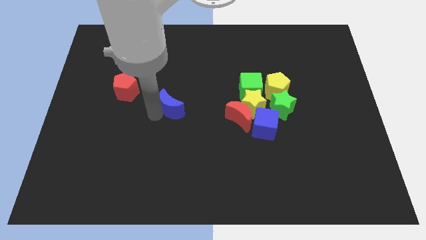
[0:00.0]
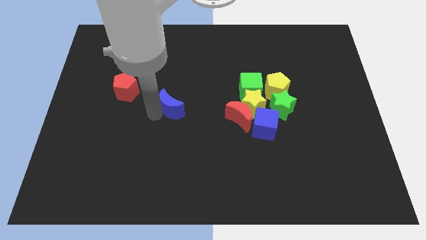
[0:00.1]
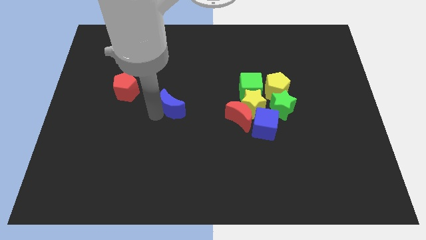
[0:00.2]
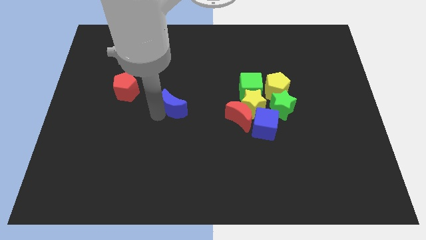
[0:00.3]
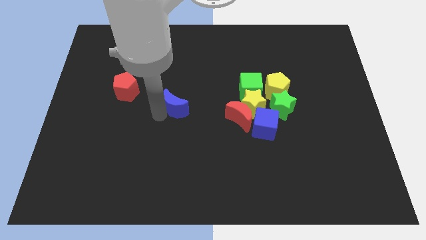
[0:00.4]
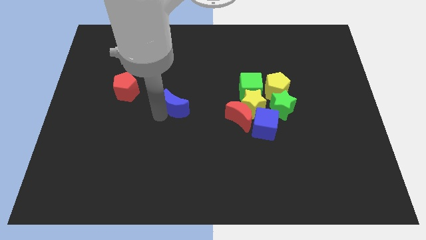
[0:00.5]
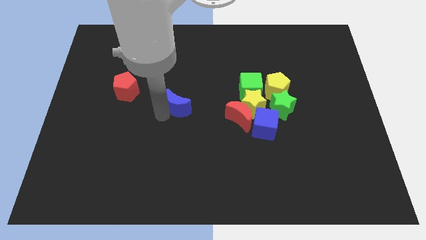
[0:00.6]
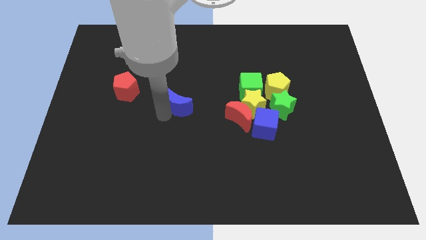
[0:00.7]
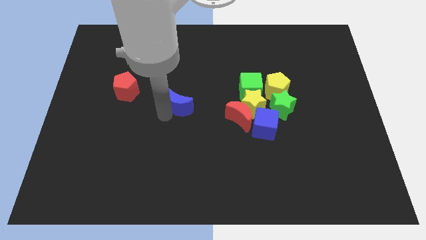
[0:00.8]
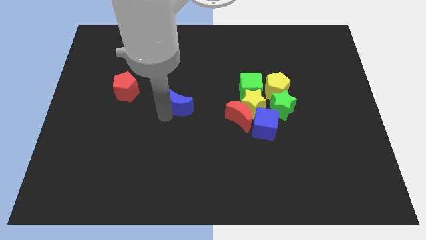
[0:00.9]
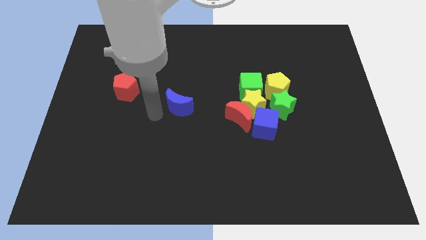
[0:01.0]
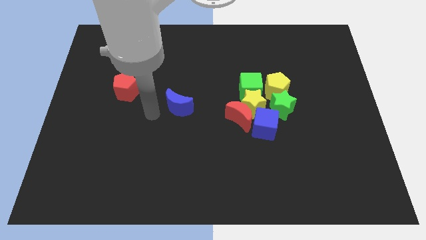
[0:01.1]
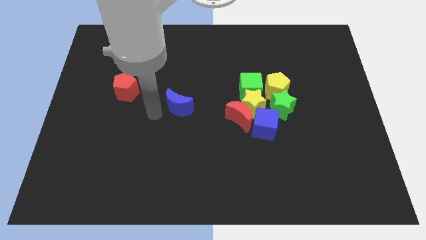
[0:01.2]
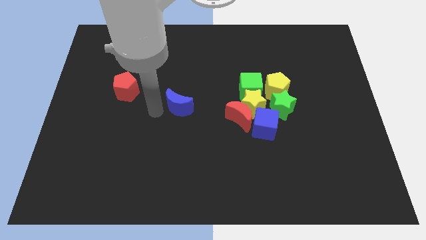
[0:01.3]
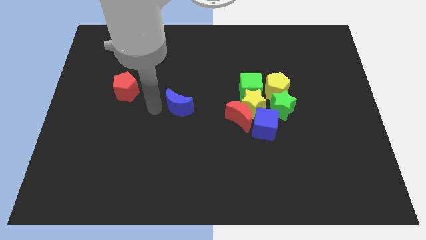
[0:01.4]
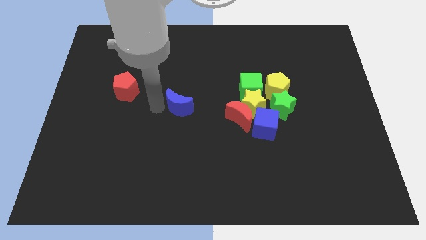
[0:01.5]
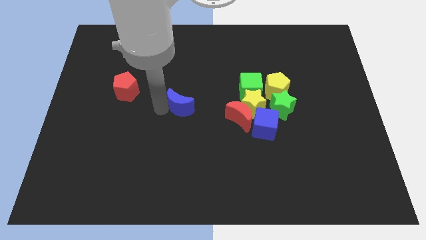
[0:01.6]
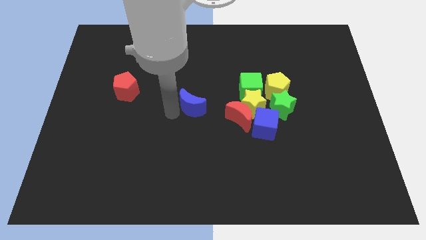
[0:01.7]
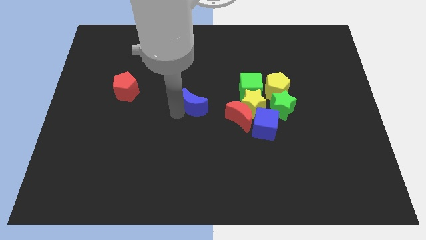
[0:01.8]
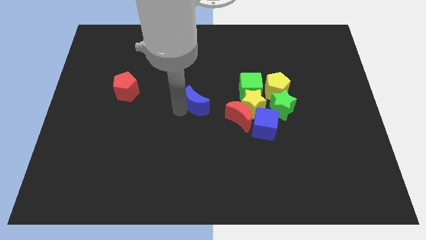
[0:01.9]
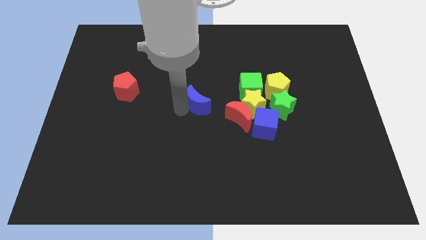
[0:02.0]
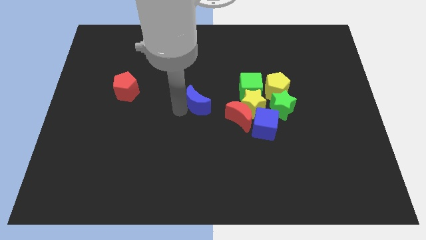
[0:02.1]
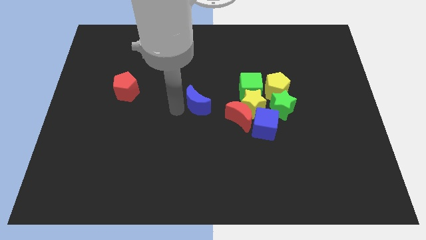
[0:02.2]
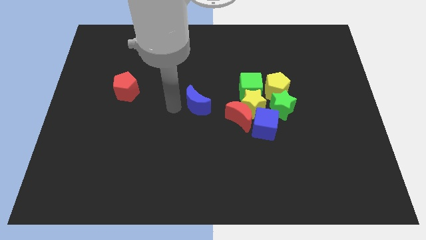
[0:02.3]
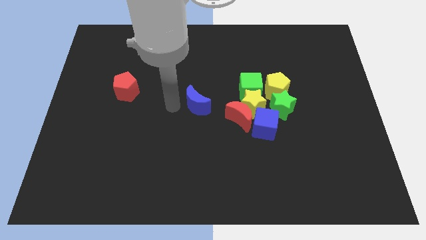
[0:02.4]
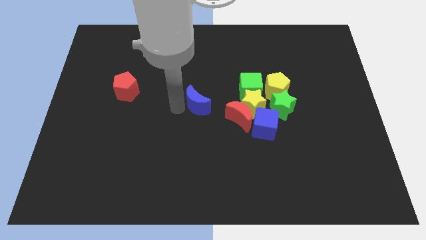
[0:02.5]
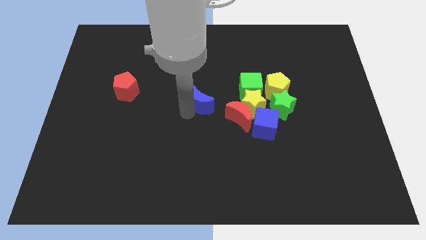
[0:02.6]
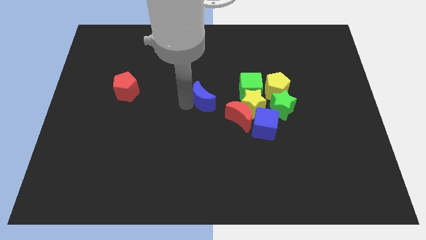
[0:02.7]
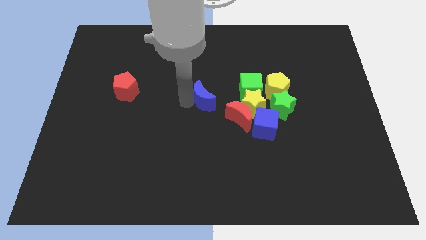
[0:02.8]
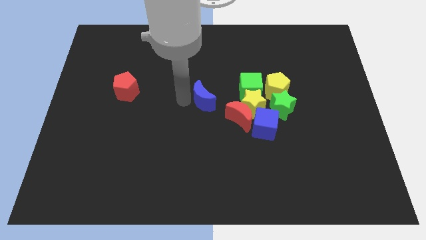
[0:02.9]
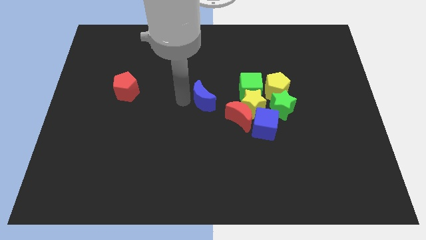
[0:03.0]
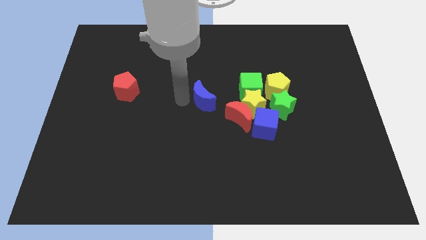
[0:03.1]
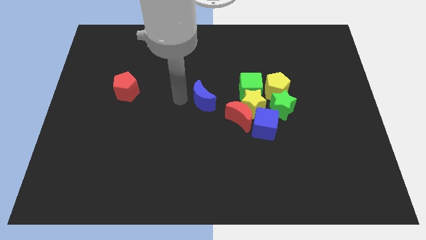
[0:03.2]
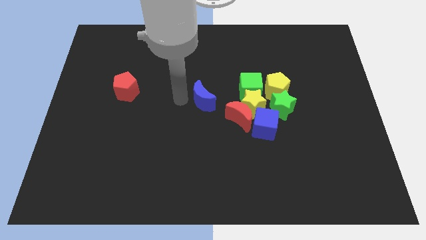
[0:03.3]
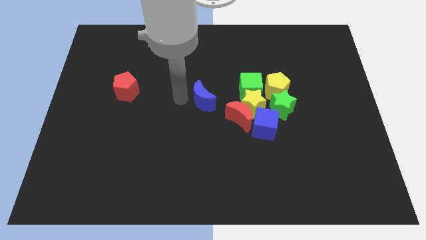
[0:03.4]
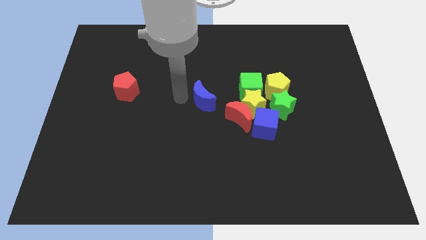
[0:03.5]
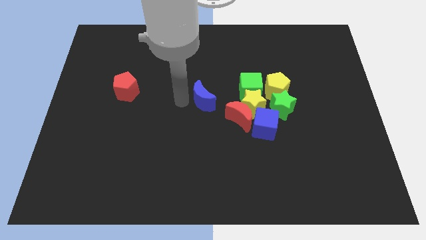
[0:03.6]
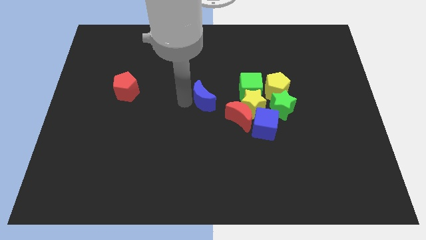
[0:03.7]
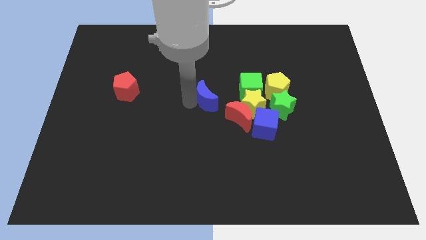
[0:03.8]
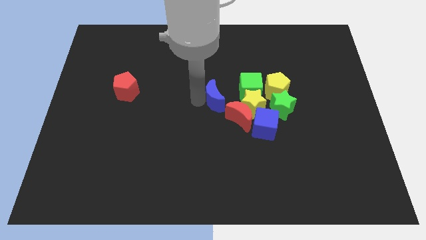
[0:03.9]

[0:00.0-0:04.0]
move blue crescent diagonally top left to the red crescent

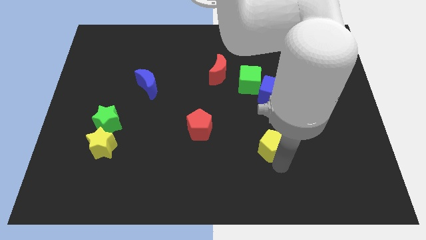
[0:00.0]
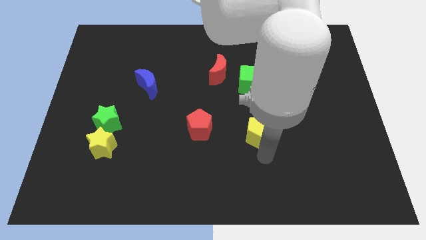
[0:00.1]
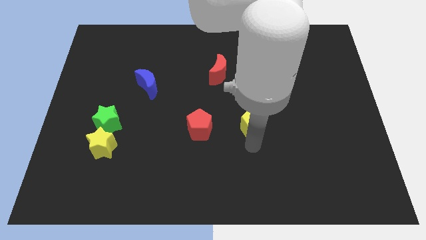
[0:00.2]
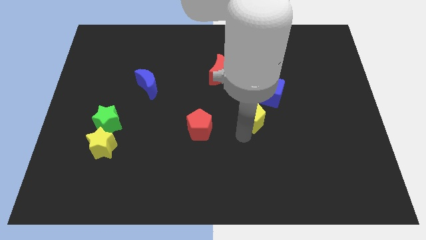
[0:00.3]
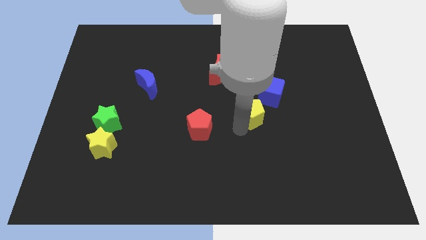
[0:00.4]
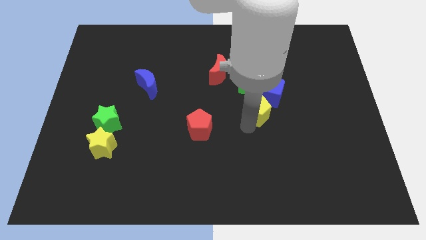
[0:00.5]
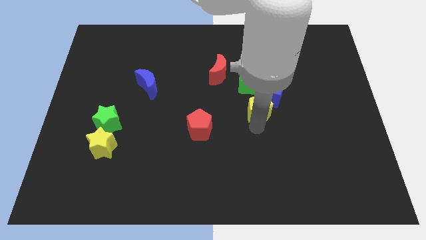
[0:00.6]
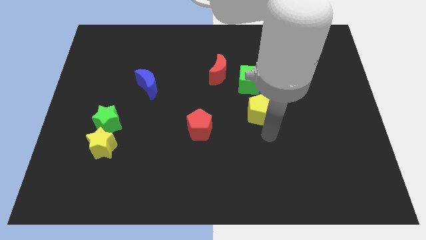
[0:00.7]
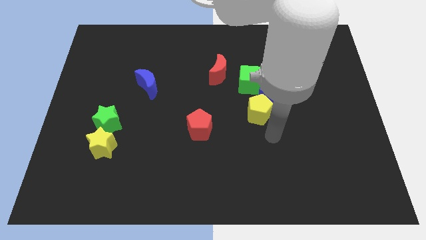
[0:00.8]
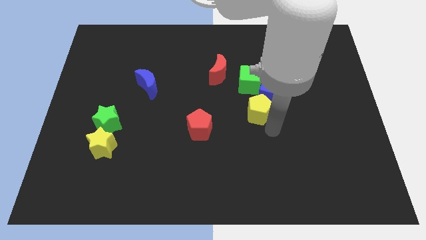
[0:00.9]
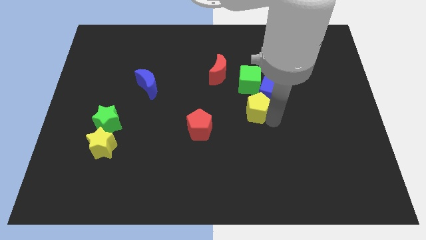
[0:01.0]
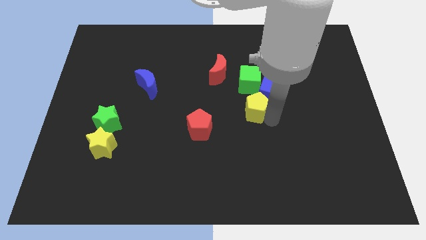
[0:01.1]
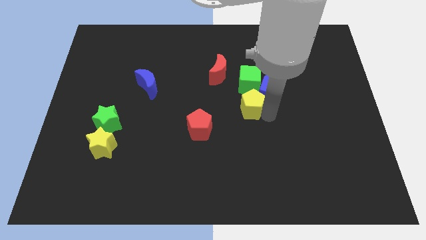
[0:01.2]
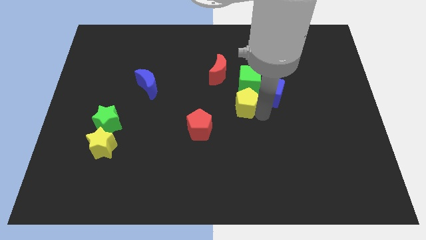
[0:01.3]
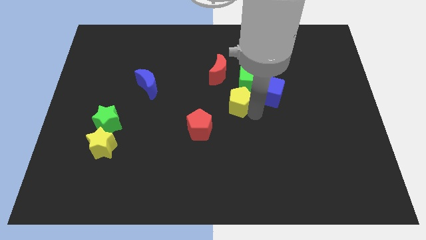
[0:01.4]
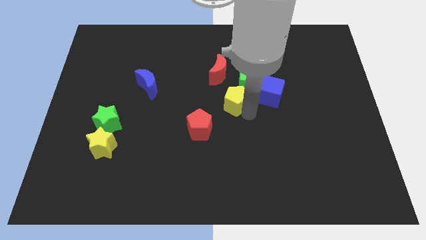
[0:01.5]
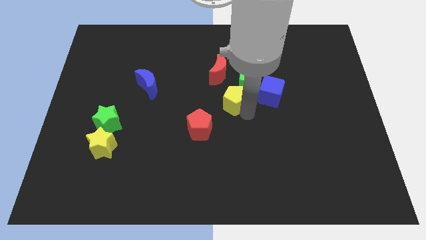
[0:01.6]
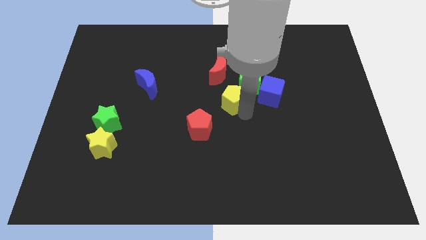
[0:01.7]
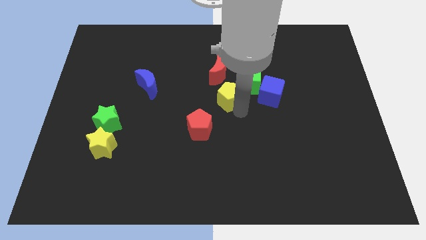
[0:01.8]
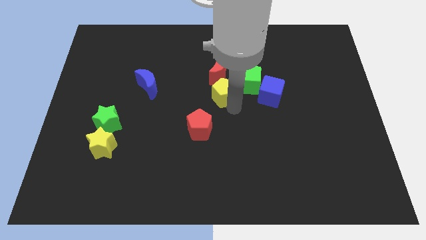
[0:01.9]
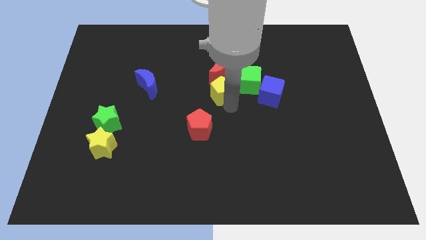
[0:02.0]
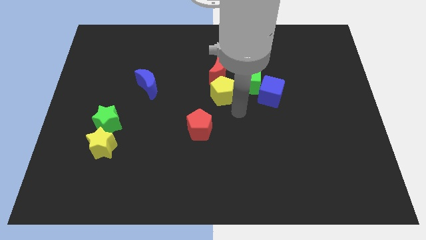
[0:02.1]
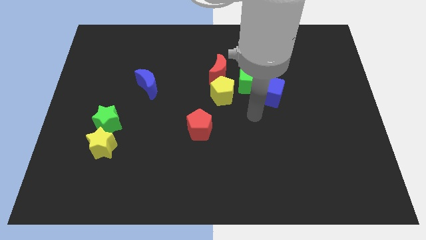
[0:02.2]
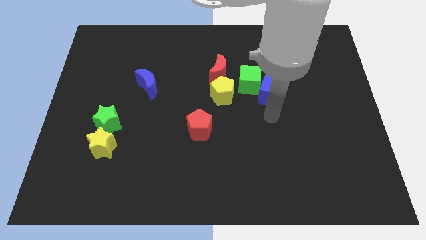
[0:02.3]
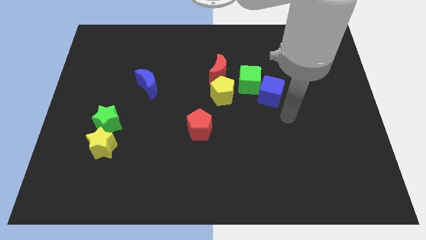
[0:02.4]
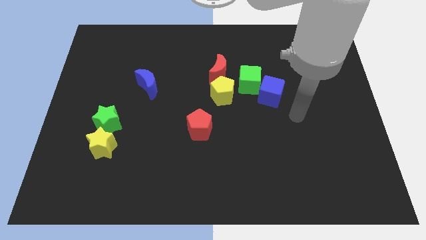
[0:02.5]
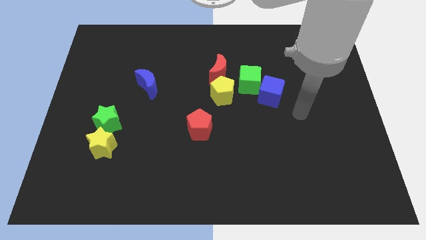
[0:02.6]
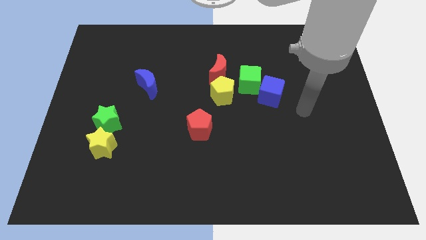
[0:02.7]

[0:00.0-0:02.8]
push the yellow pentagon at the bottom side of the red crescent

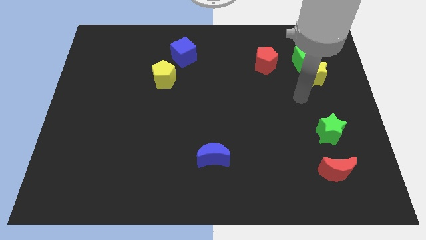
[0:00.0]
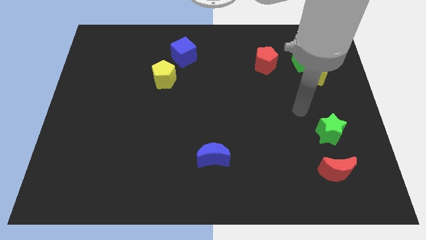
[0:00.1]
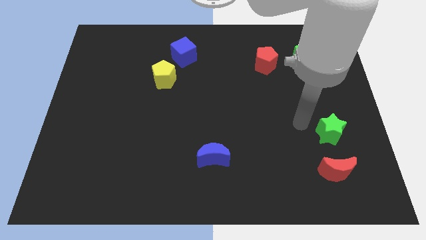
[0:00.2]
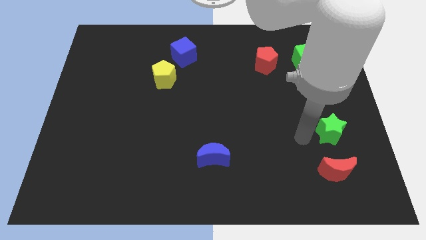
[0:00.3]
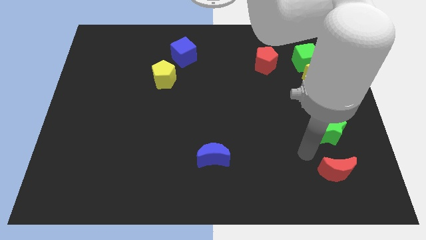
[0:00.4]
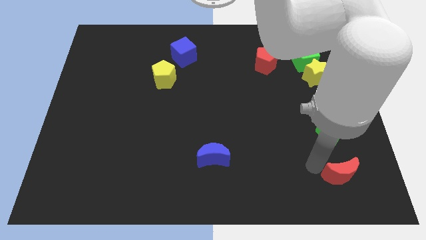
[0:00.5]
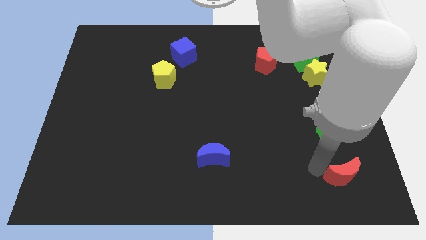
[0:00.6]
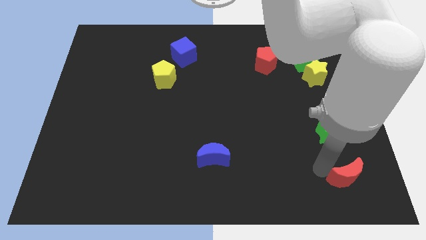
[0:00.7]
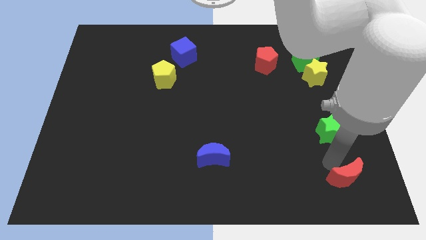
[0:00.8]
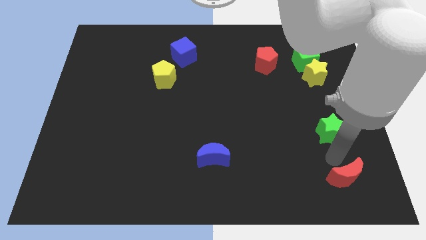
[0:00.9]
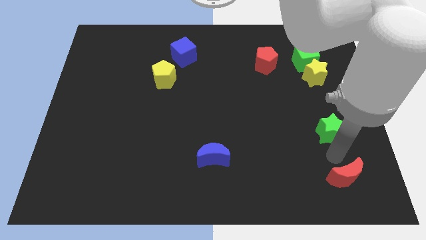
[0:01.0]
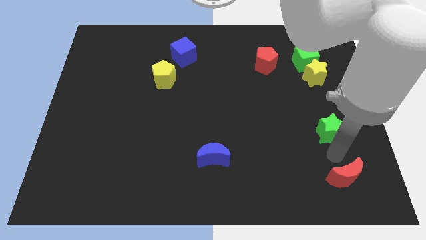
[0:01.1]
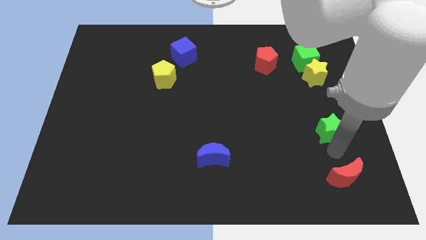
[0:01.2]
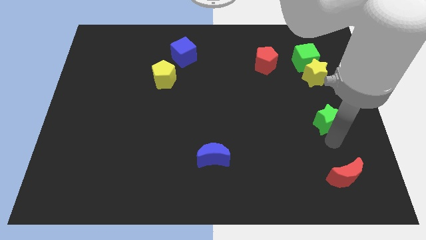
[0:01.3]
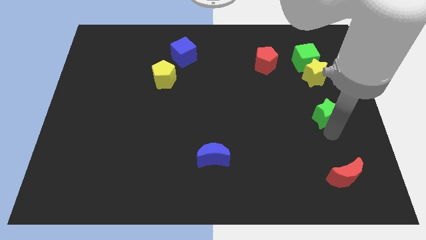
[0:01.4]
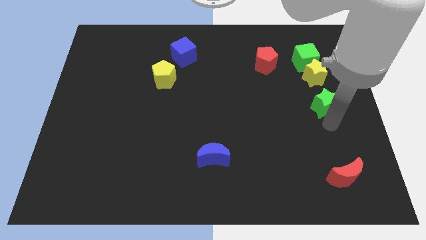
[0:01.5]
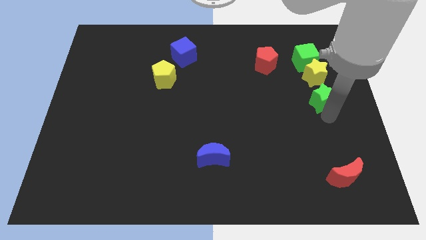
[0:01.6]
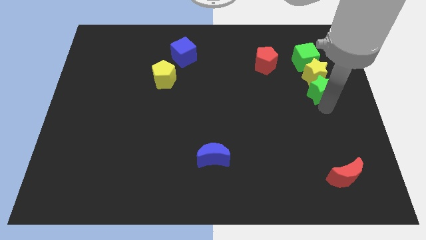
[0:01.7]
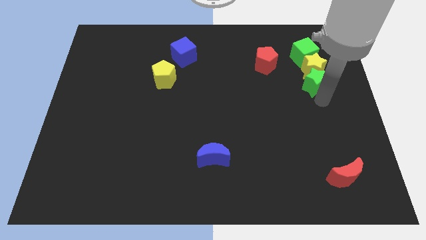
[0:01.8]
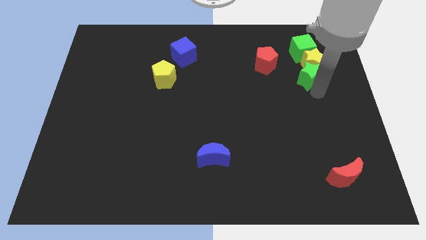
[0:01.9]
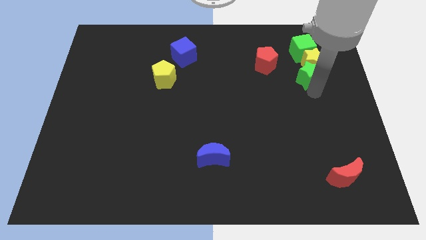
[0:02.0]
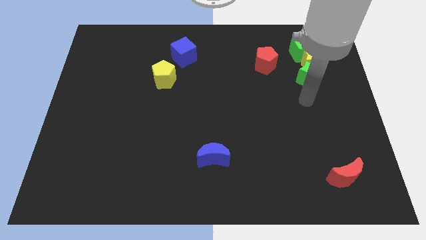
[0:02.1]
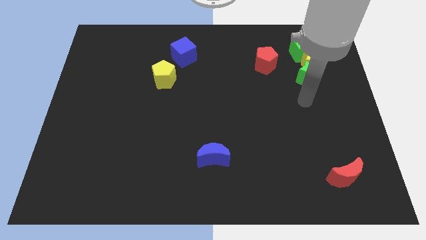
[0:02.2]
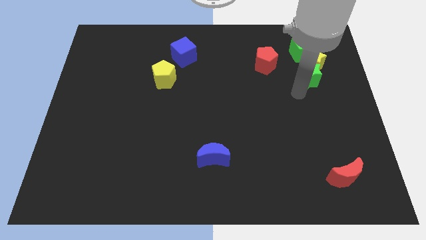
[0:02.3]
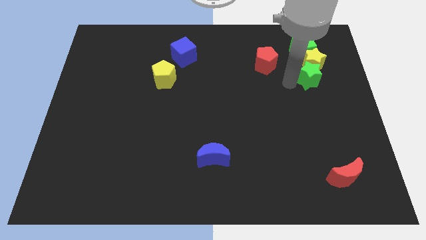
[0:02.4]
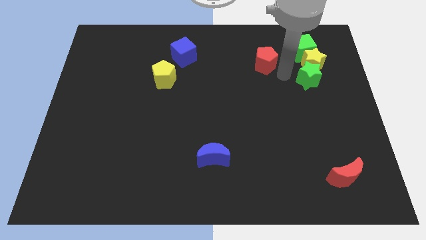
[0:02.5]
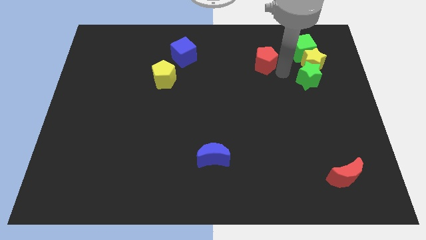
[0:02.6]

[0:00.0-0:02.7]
push the green star into the yellow star
